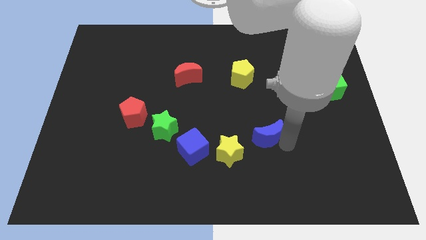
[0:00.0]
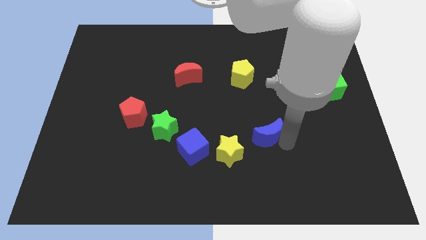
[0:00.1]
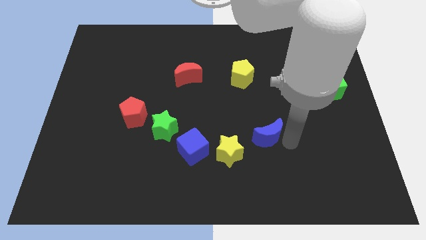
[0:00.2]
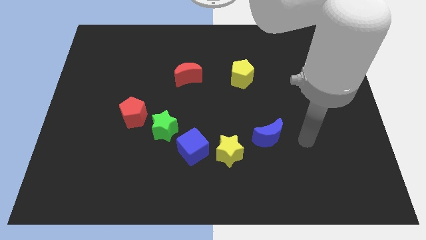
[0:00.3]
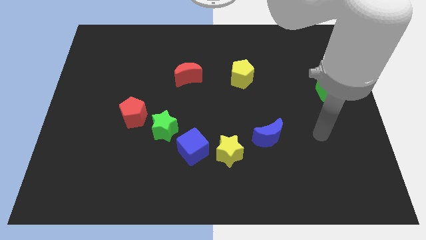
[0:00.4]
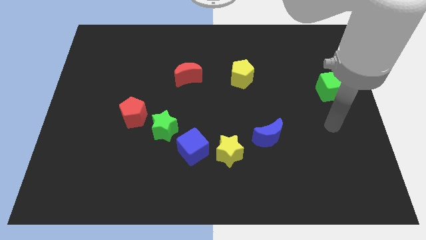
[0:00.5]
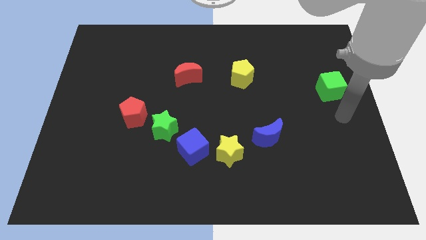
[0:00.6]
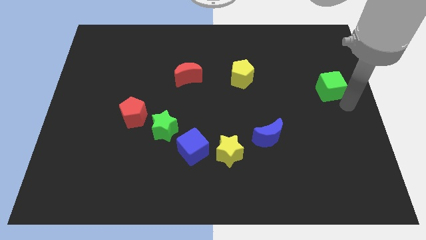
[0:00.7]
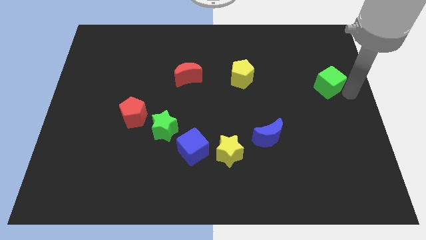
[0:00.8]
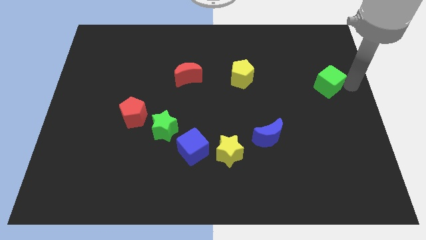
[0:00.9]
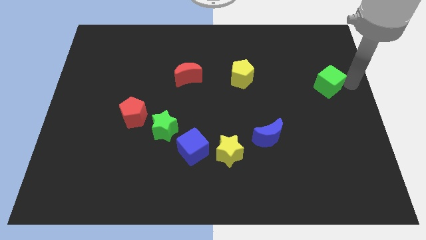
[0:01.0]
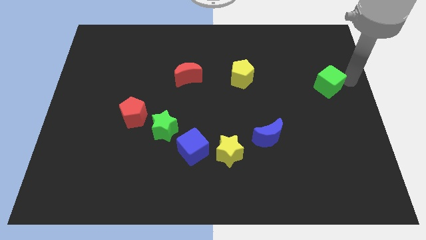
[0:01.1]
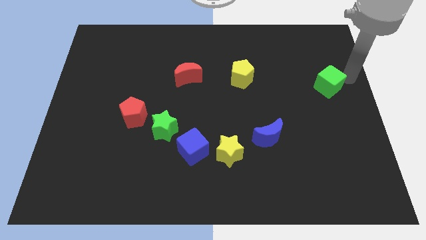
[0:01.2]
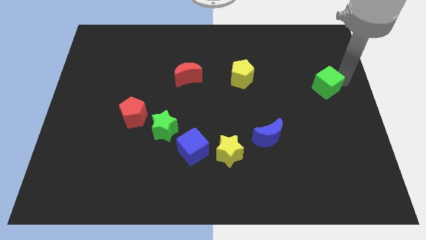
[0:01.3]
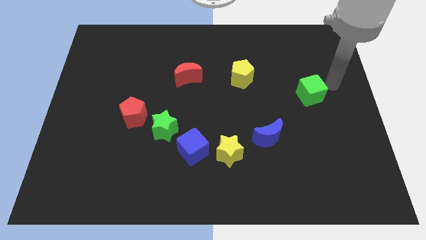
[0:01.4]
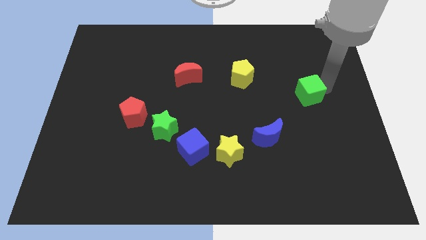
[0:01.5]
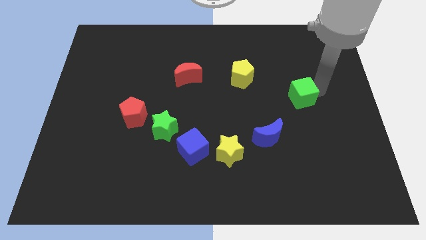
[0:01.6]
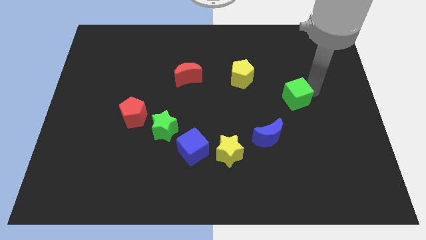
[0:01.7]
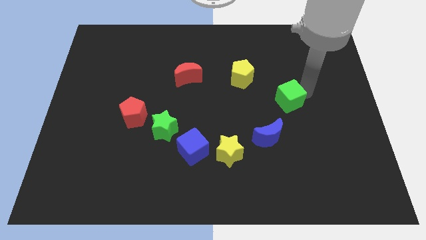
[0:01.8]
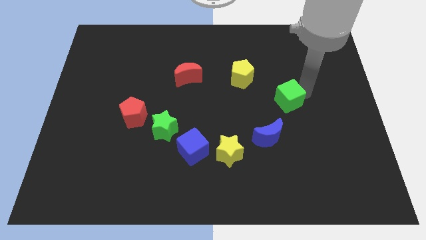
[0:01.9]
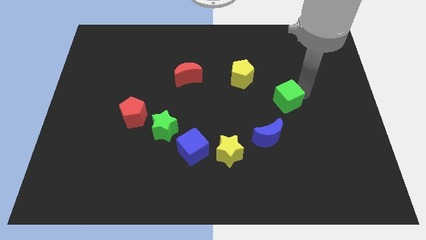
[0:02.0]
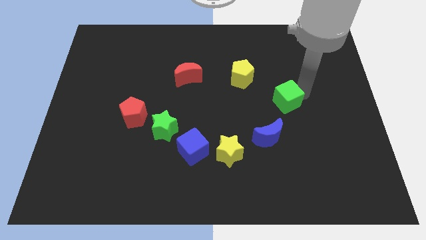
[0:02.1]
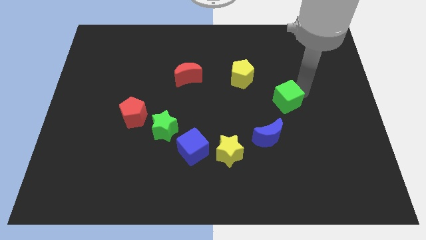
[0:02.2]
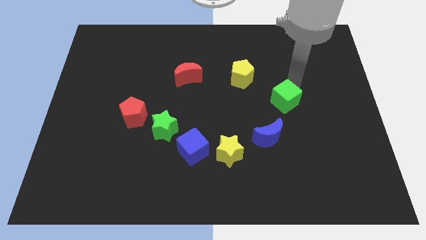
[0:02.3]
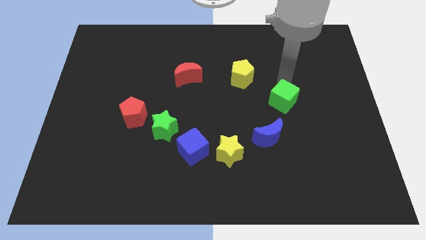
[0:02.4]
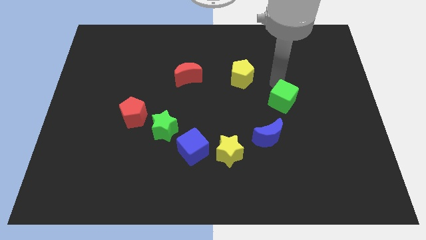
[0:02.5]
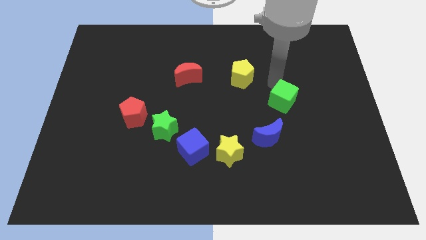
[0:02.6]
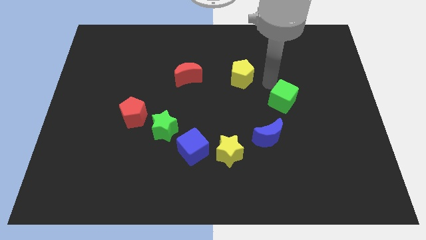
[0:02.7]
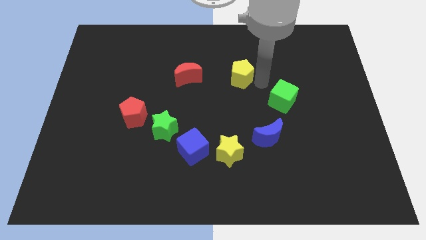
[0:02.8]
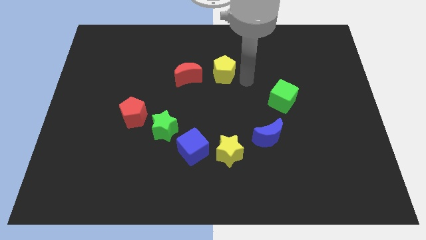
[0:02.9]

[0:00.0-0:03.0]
push the green cube to the top of the blue crescent

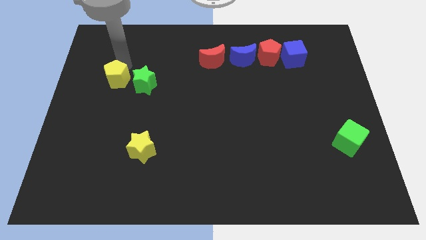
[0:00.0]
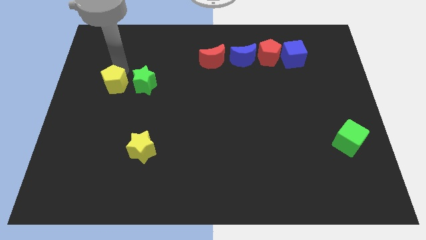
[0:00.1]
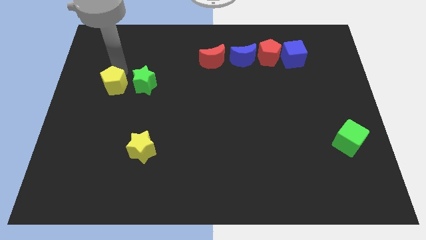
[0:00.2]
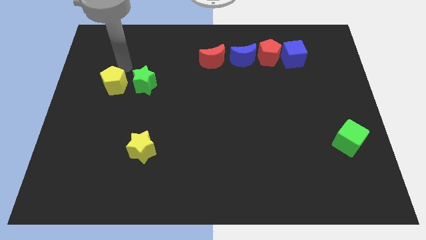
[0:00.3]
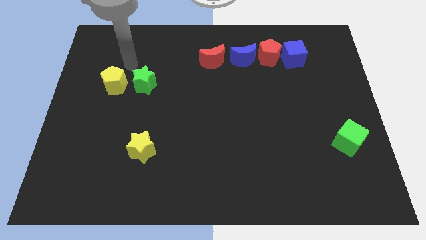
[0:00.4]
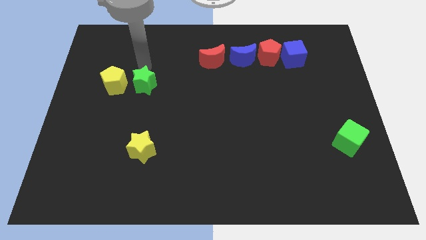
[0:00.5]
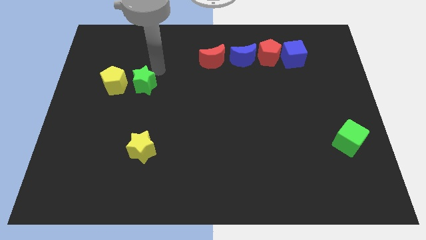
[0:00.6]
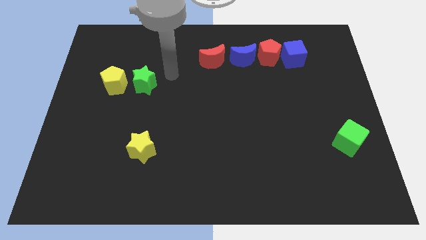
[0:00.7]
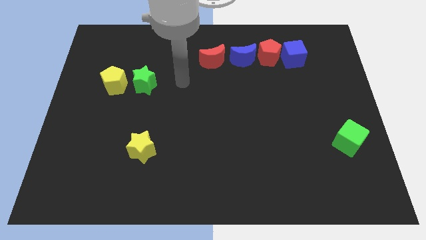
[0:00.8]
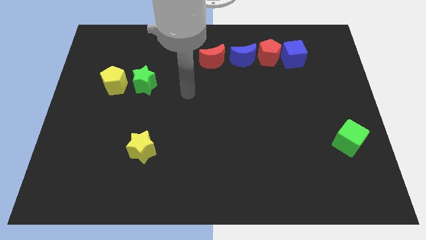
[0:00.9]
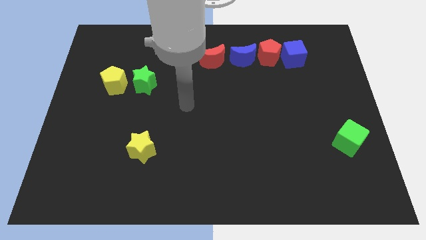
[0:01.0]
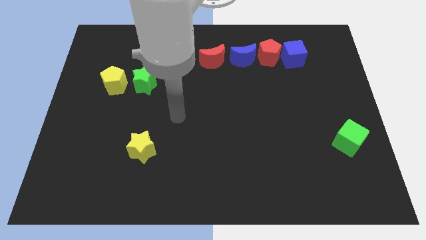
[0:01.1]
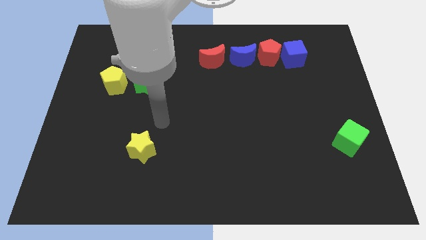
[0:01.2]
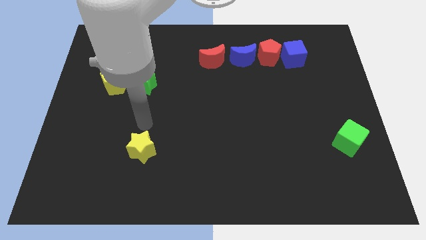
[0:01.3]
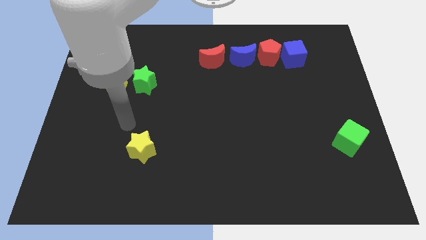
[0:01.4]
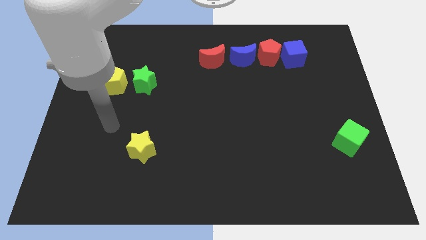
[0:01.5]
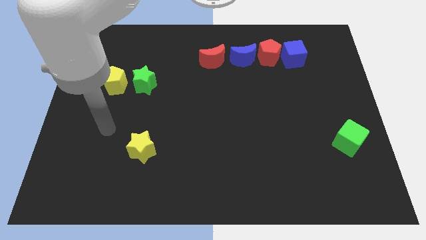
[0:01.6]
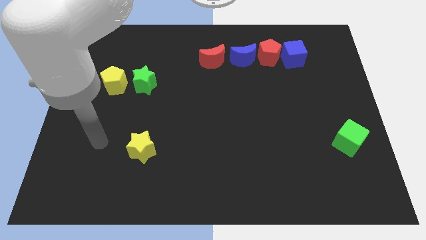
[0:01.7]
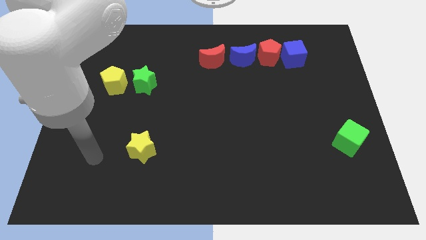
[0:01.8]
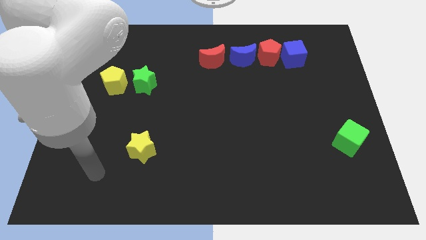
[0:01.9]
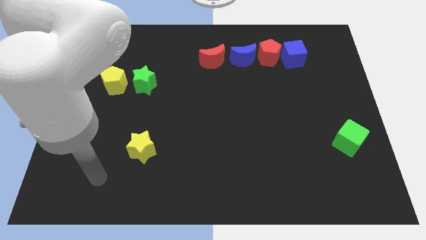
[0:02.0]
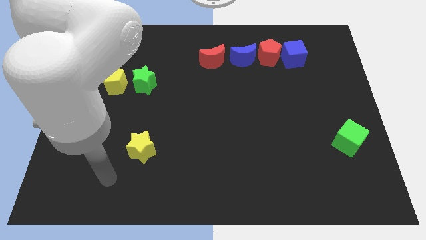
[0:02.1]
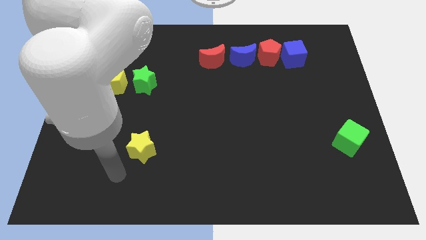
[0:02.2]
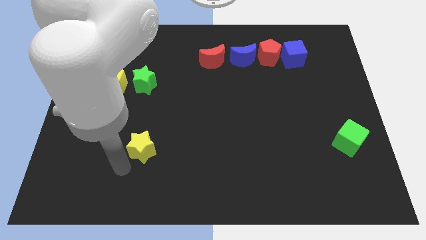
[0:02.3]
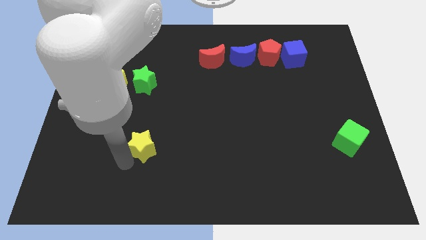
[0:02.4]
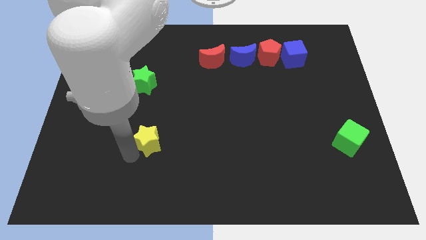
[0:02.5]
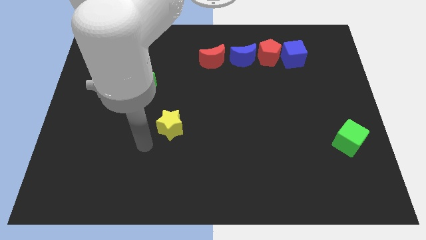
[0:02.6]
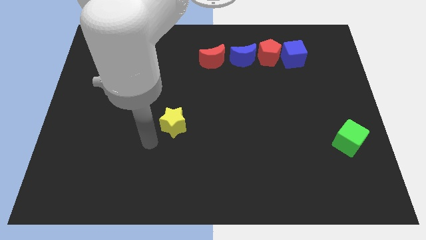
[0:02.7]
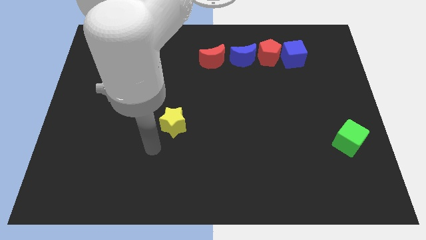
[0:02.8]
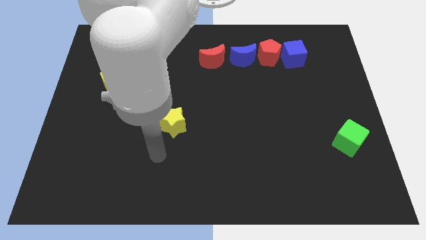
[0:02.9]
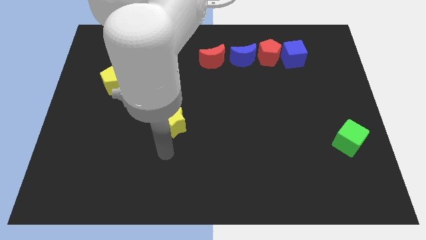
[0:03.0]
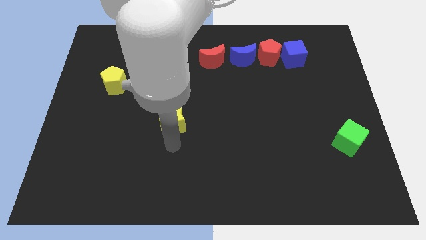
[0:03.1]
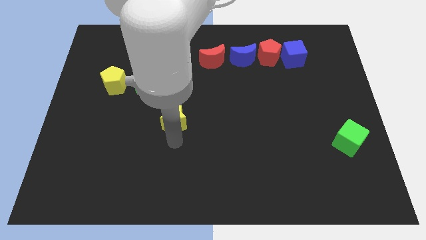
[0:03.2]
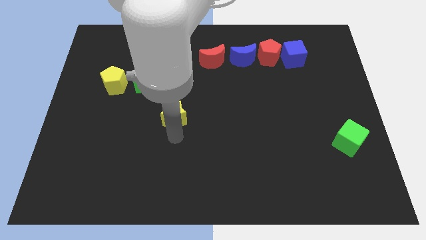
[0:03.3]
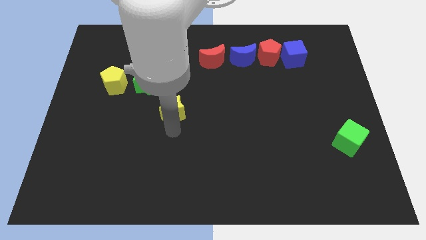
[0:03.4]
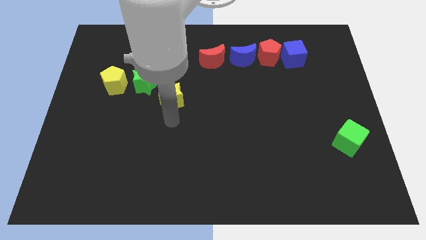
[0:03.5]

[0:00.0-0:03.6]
slide the yellow star towards the green star

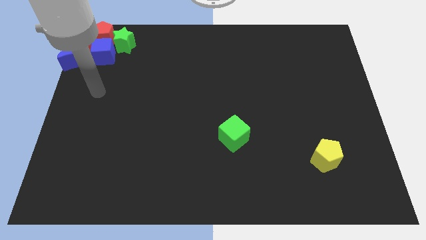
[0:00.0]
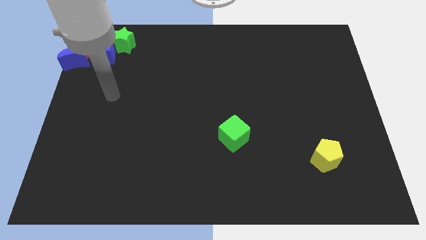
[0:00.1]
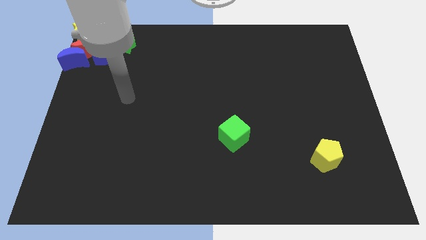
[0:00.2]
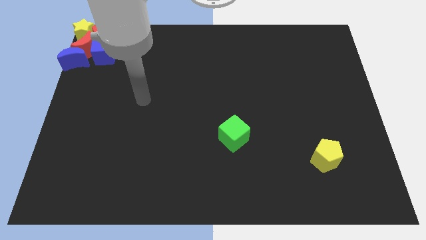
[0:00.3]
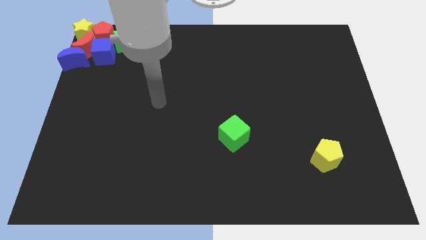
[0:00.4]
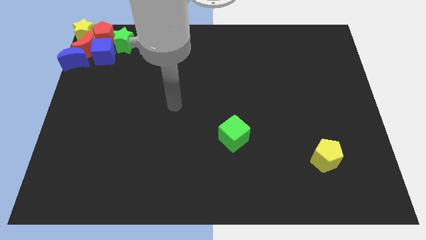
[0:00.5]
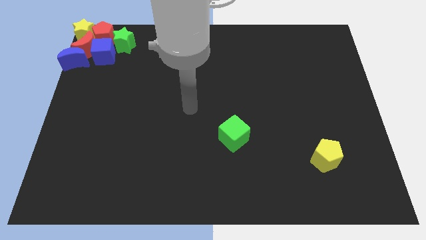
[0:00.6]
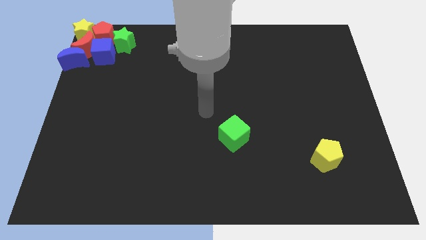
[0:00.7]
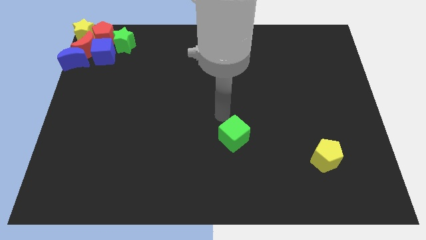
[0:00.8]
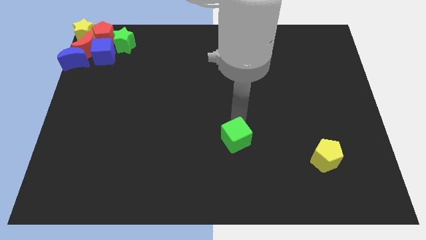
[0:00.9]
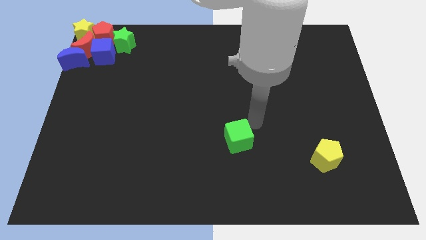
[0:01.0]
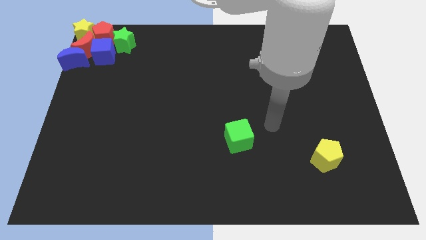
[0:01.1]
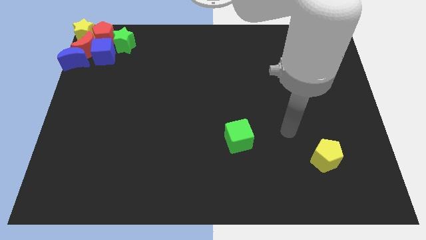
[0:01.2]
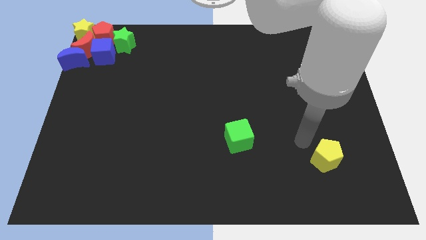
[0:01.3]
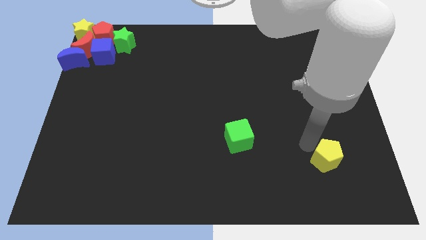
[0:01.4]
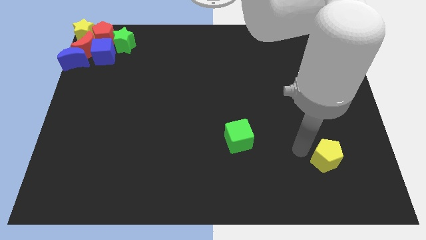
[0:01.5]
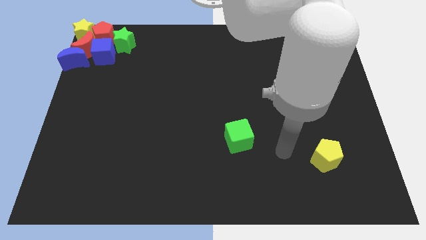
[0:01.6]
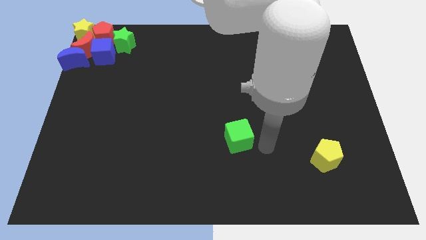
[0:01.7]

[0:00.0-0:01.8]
point your arm at the right of the green cube

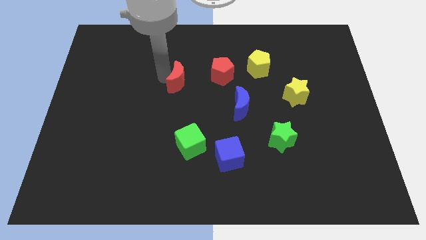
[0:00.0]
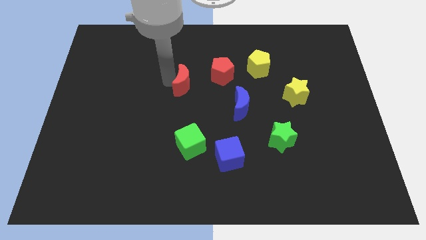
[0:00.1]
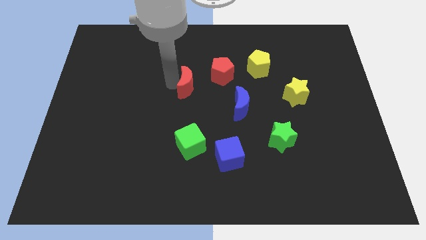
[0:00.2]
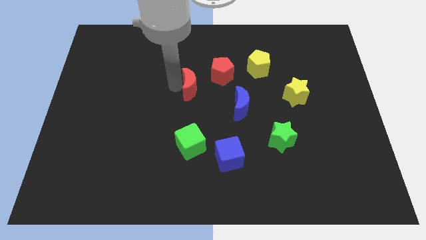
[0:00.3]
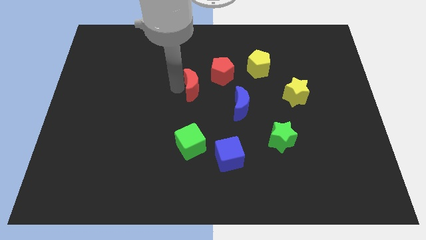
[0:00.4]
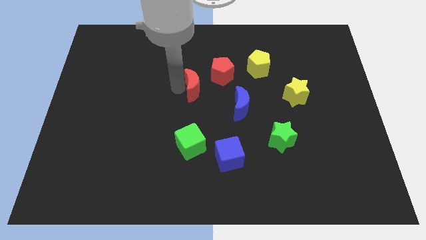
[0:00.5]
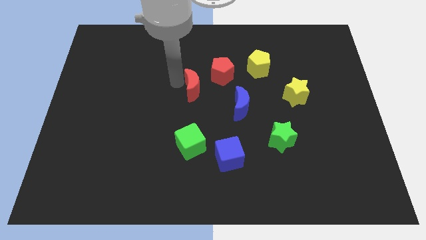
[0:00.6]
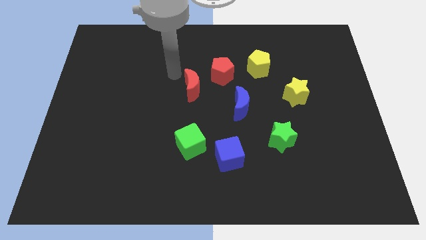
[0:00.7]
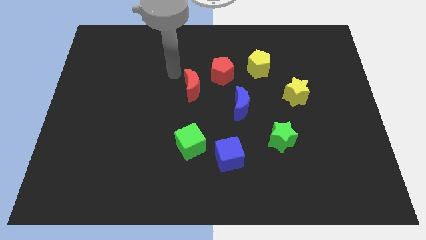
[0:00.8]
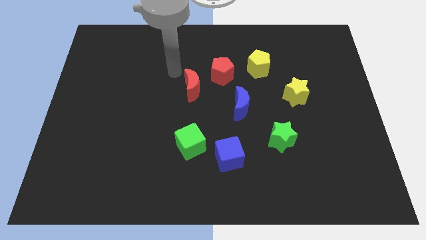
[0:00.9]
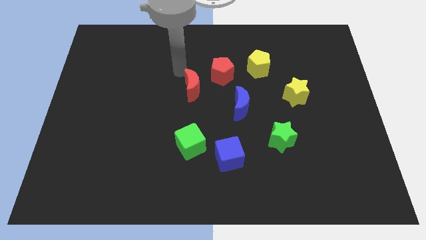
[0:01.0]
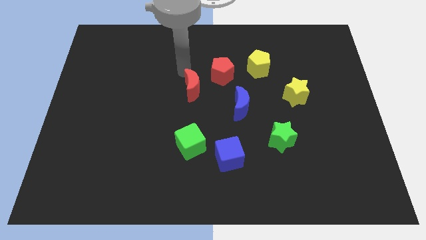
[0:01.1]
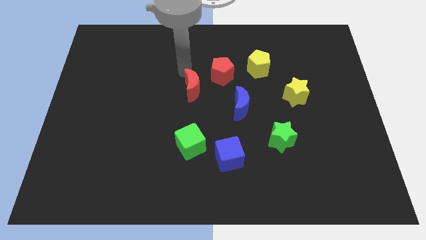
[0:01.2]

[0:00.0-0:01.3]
move the red crescent on top of the green cube to make a circle on the board
